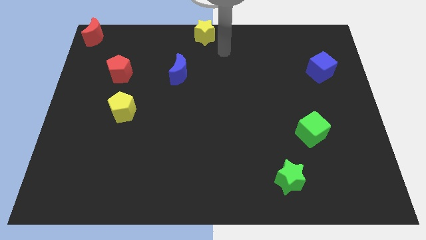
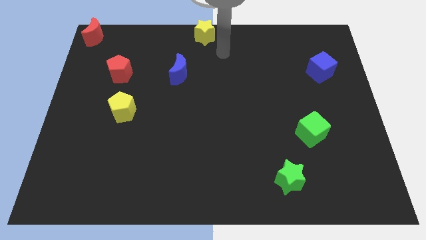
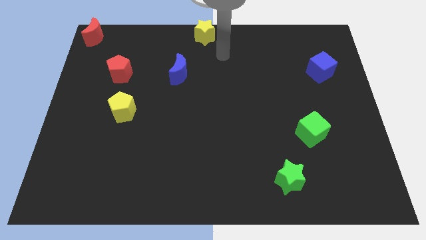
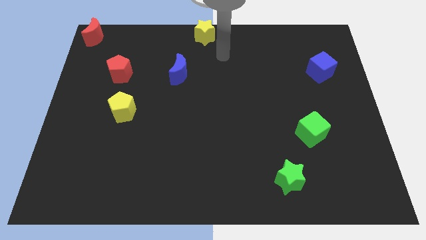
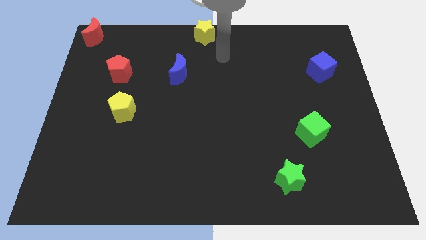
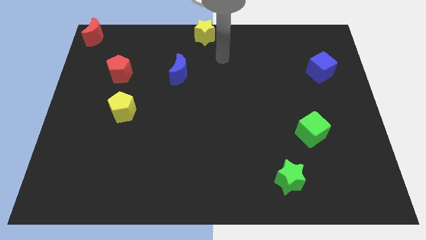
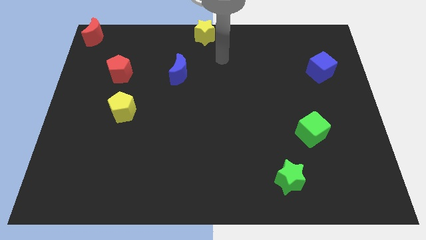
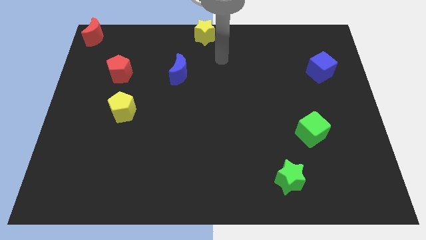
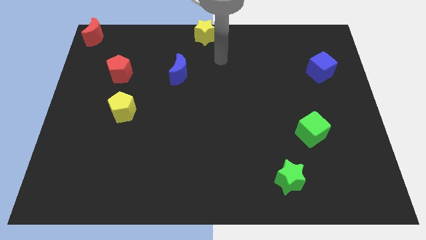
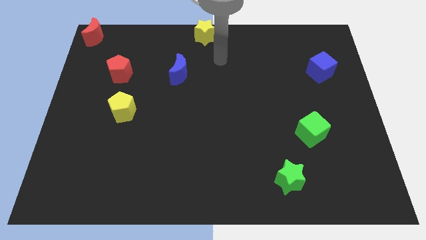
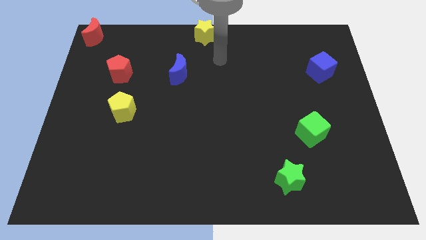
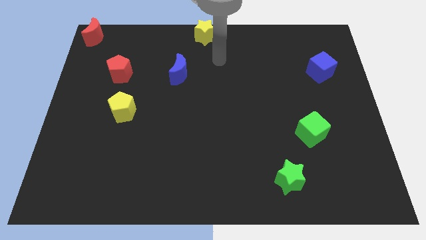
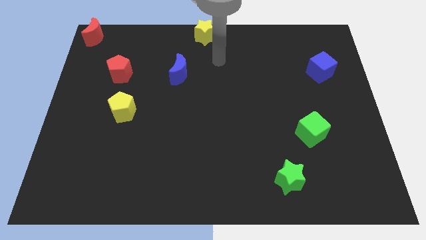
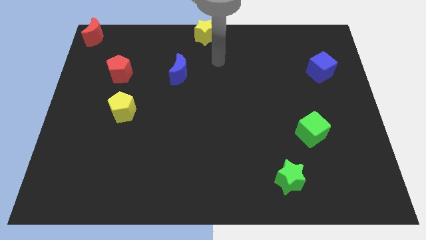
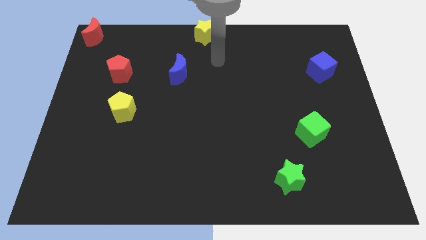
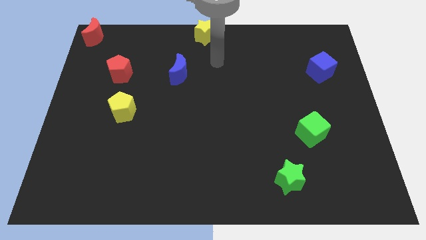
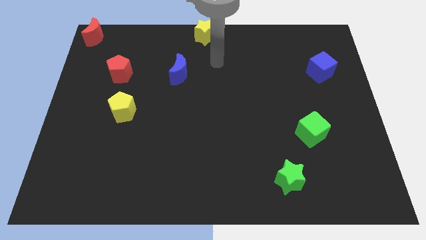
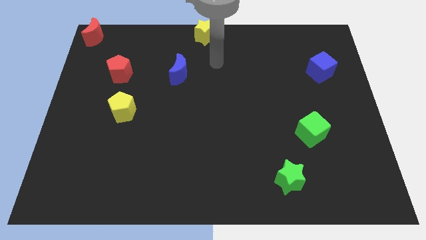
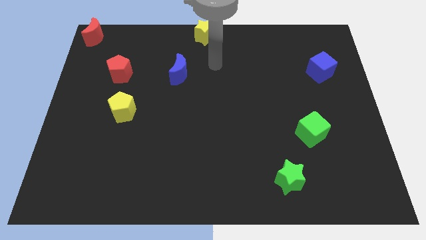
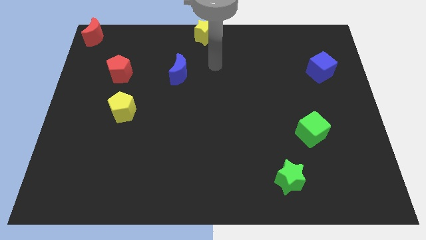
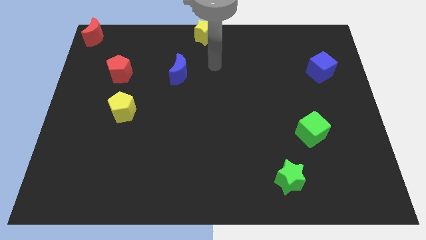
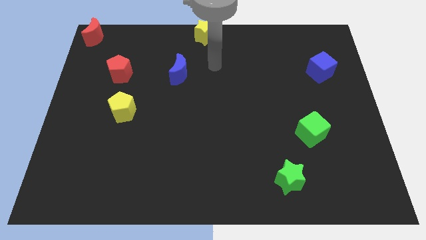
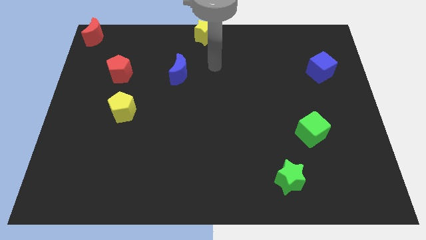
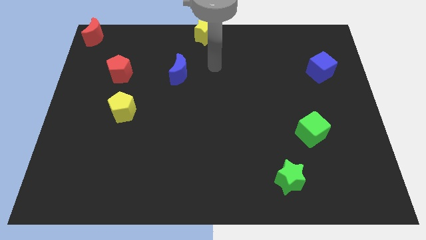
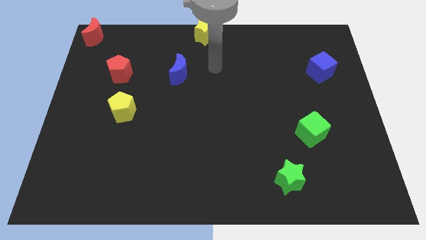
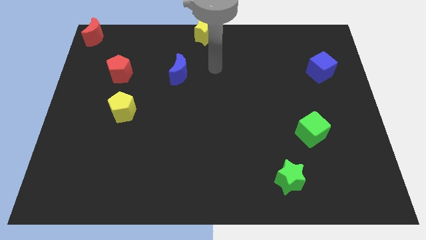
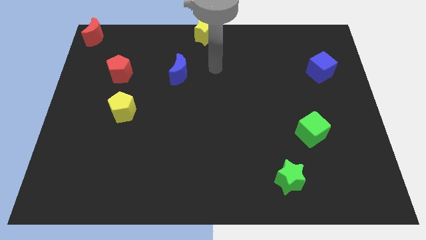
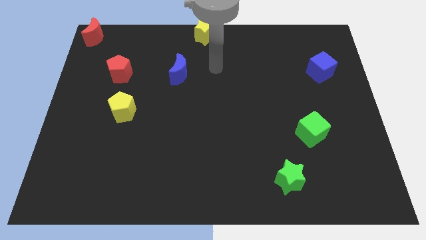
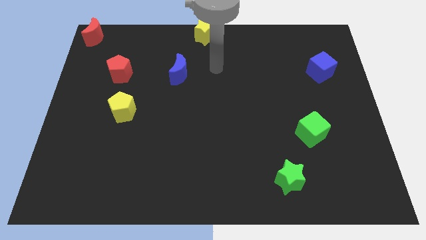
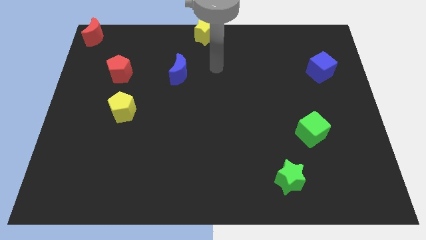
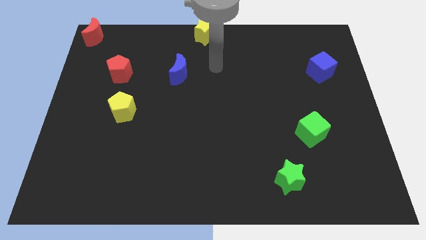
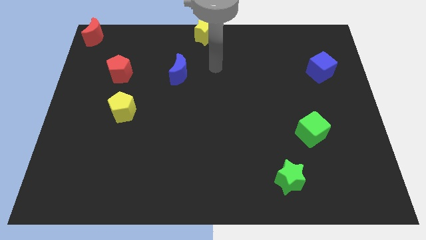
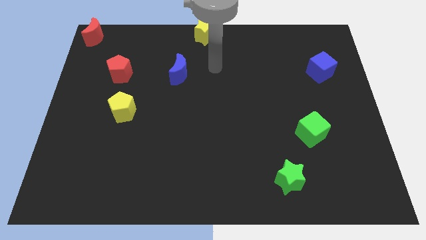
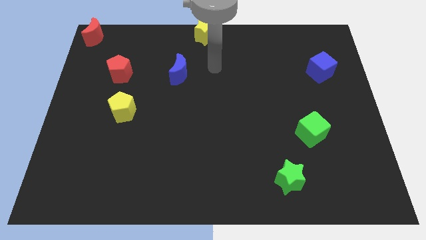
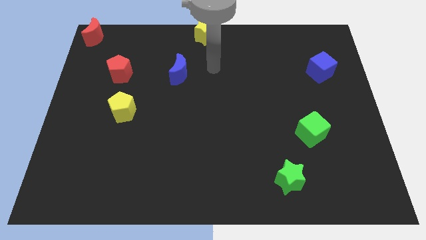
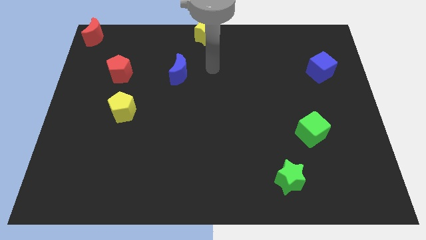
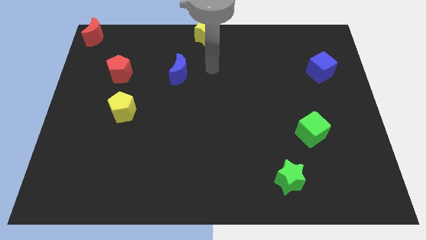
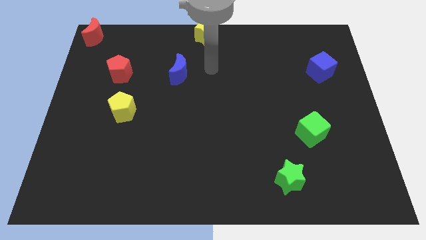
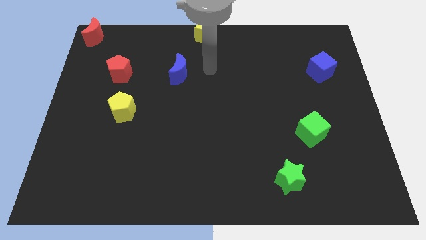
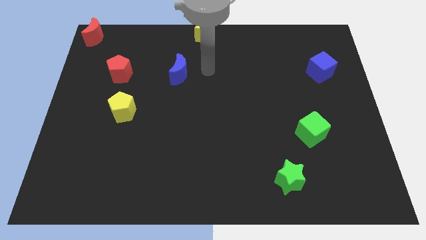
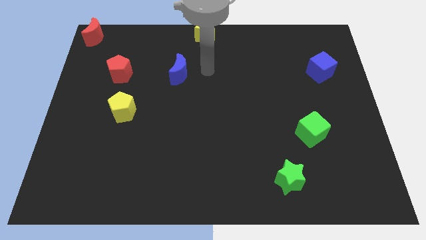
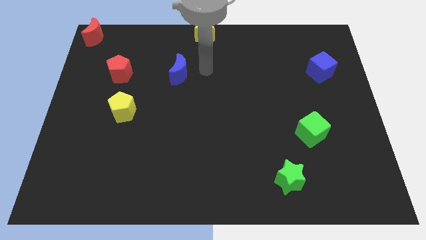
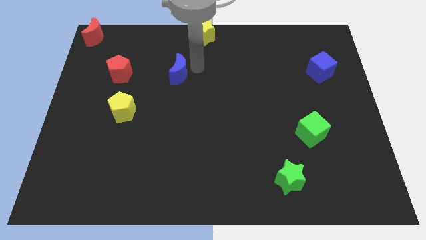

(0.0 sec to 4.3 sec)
move your arm towards the blue crescent

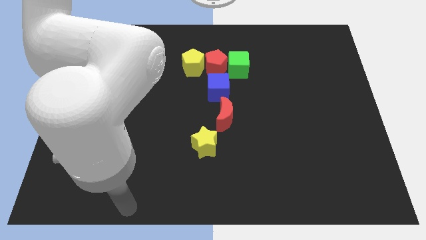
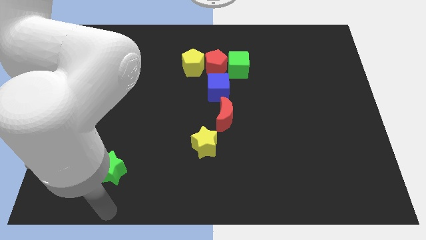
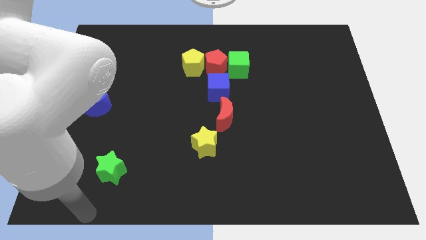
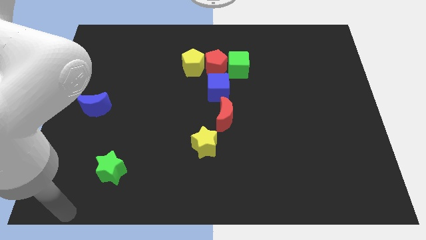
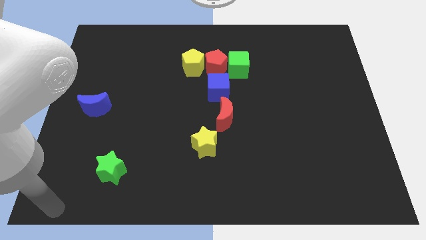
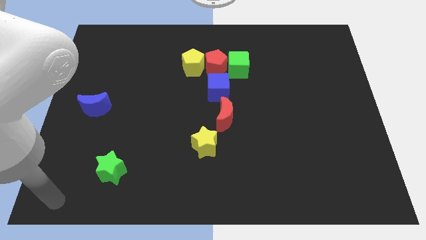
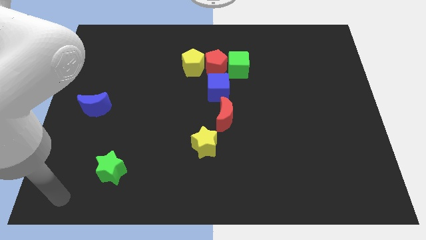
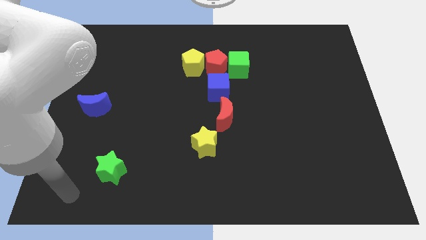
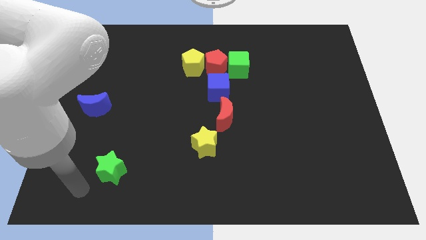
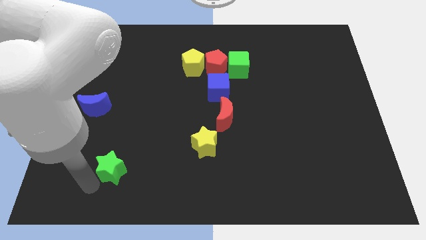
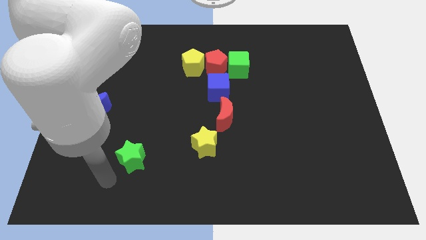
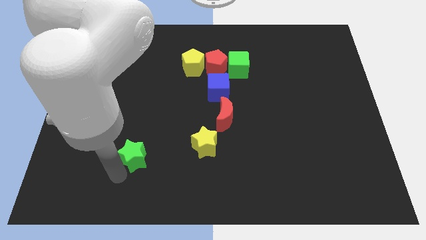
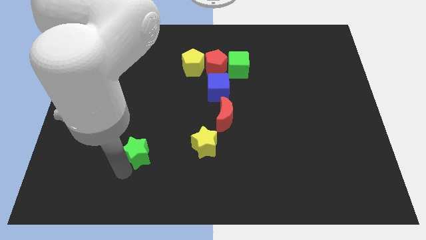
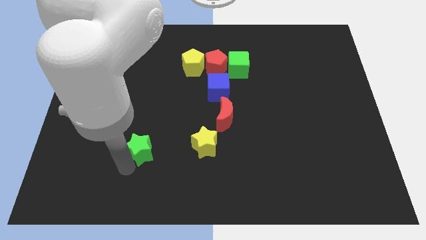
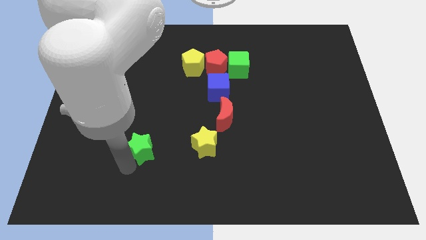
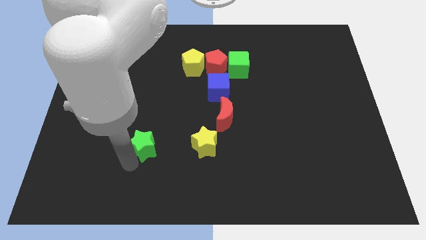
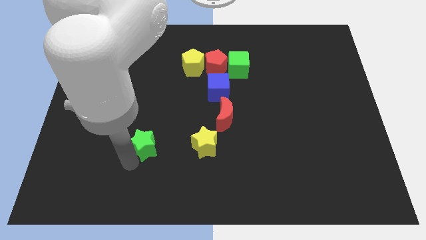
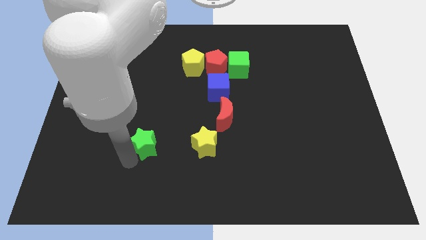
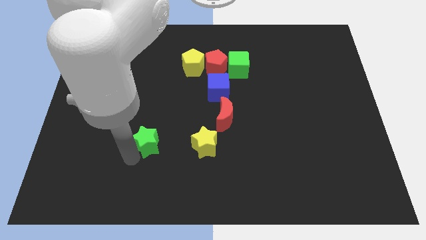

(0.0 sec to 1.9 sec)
push the green star horizontally to the left side of the yellow star

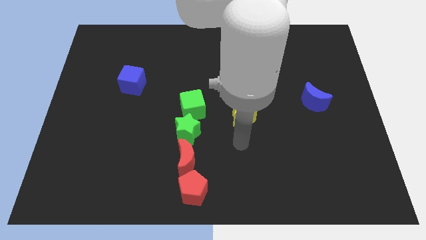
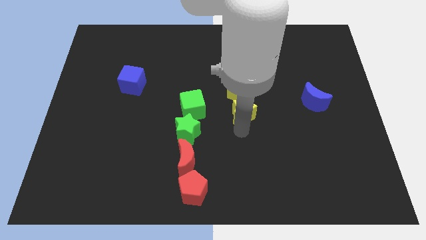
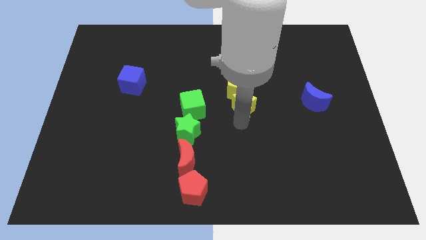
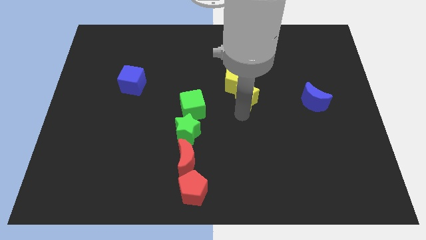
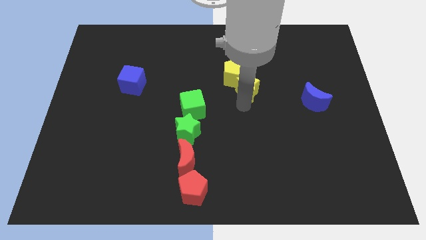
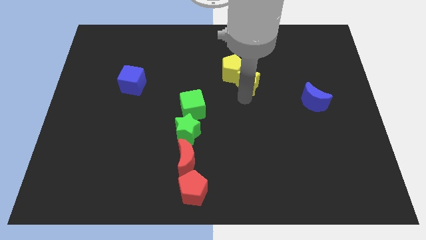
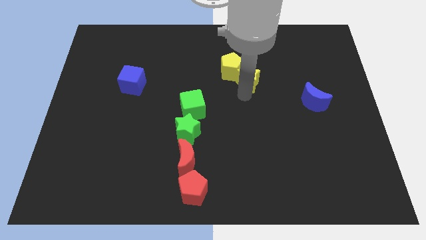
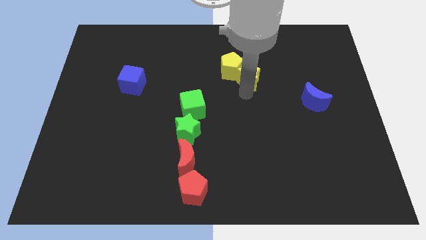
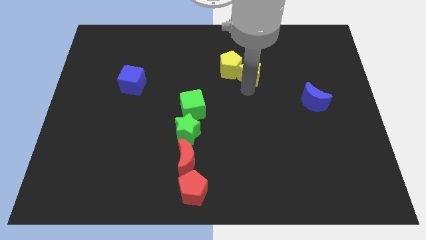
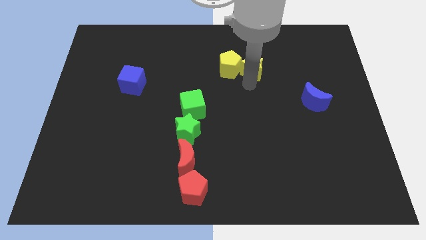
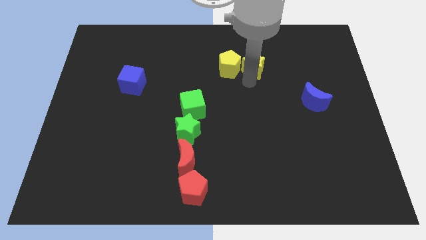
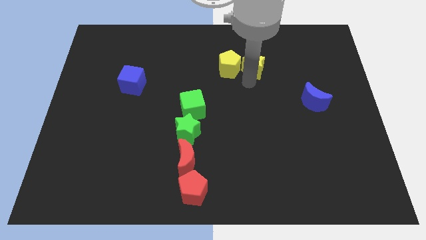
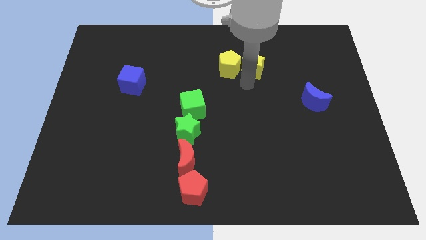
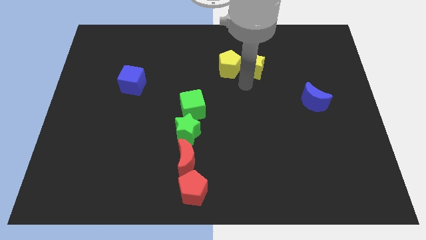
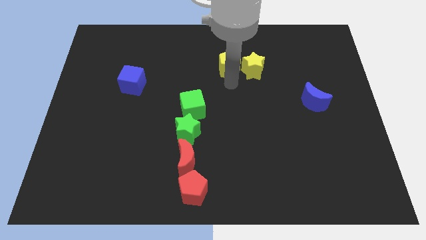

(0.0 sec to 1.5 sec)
place yellow star beside yellow pentagon

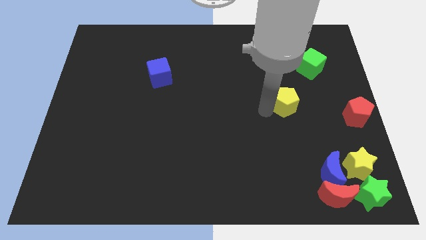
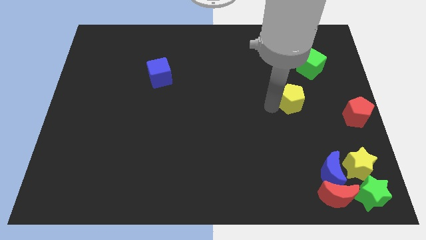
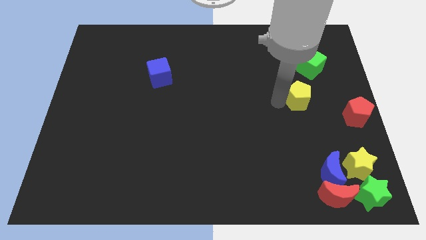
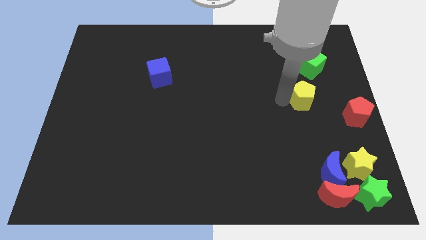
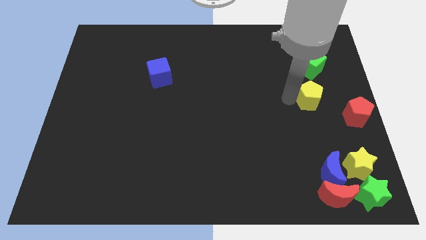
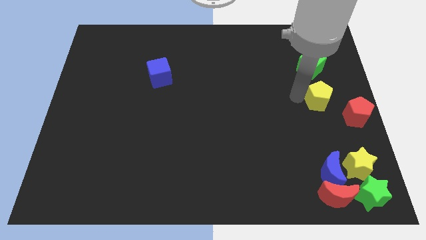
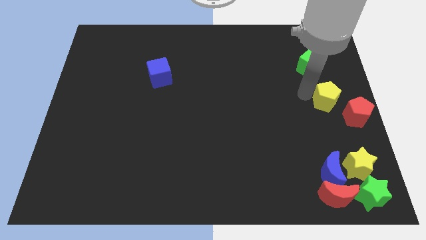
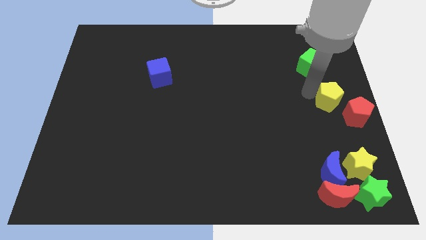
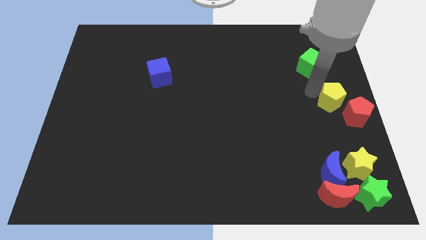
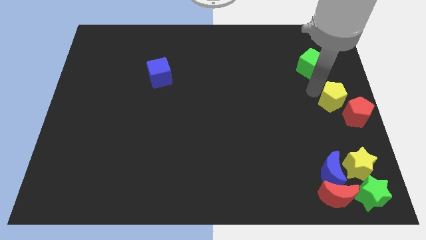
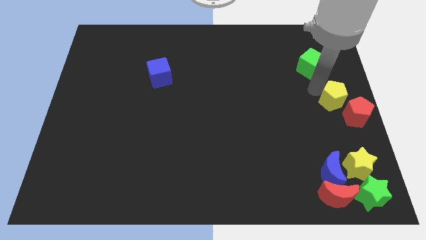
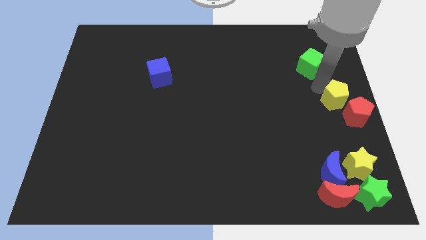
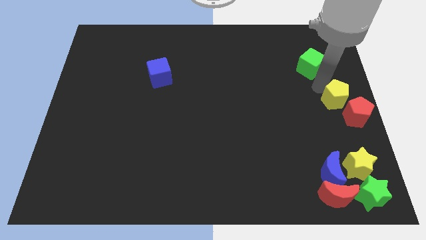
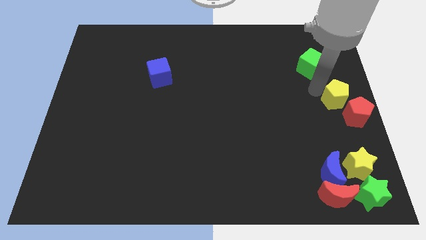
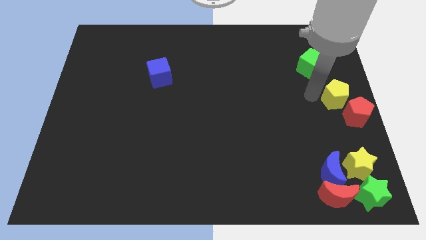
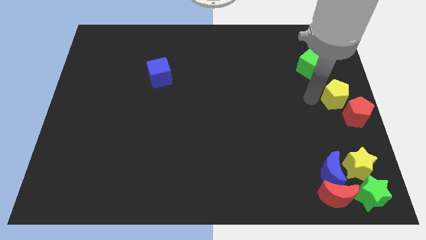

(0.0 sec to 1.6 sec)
move yellow pentagon left top to the red pentagon
